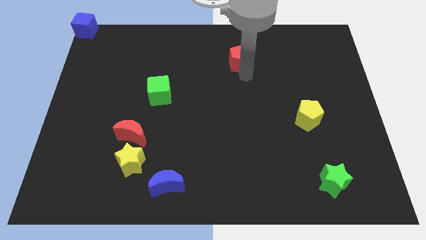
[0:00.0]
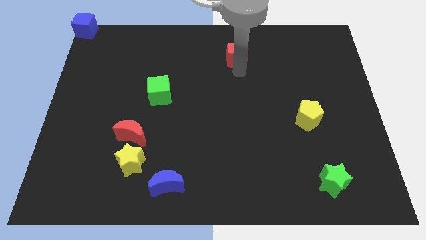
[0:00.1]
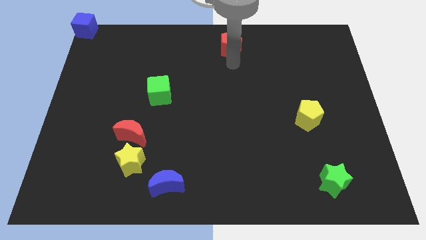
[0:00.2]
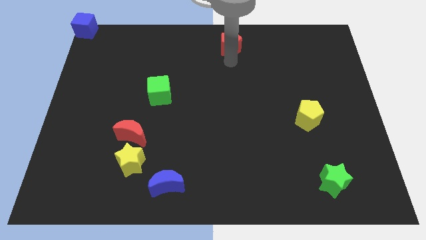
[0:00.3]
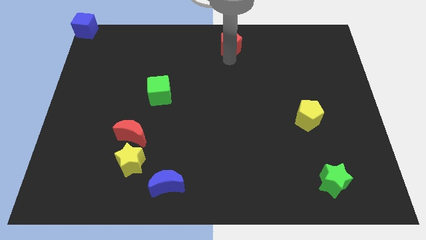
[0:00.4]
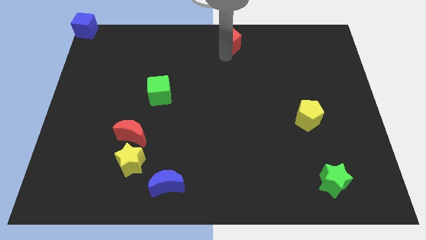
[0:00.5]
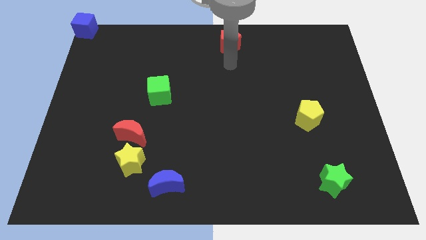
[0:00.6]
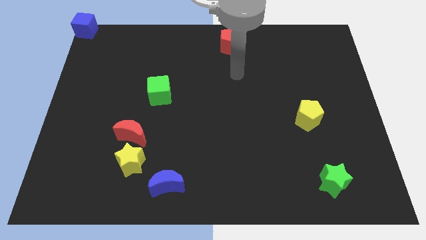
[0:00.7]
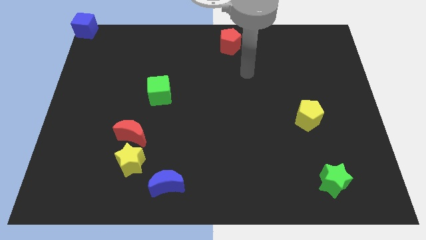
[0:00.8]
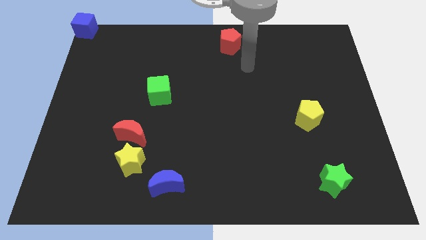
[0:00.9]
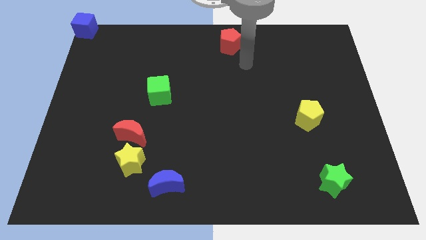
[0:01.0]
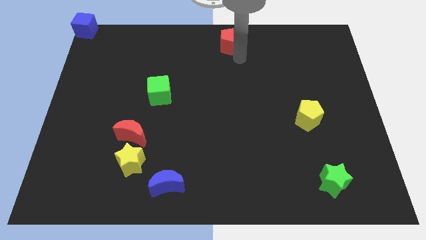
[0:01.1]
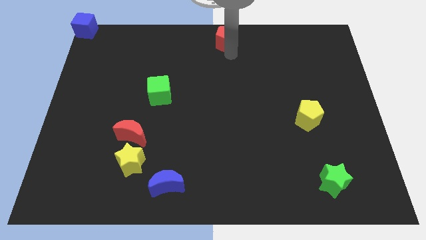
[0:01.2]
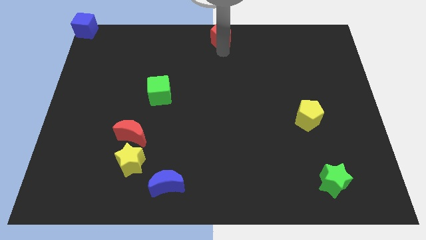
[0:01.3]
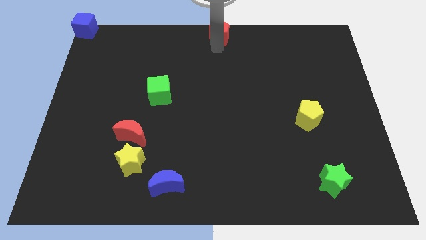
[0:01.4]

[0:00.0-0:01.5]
slide the red pentagon to the top center

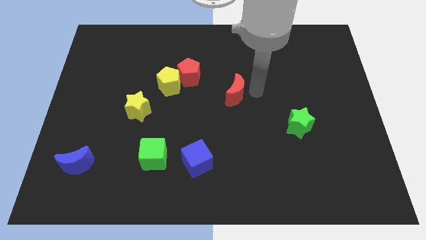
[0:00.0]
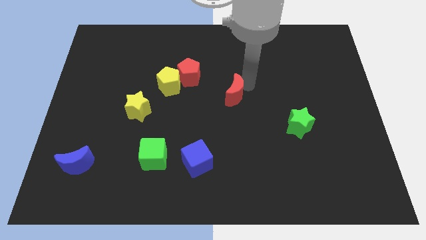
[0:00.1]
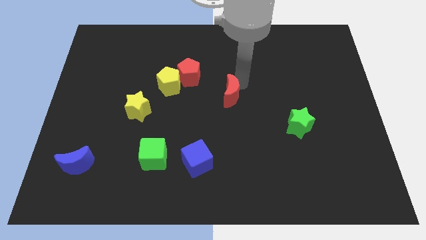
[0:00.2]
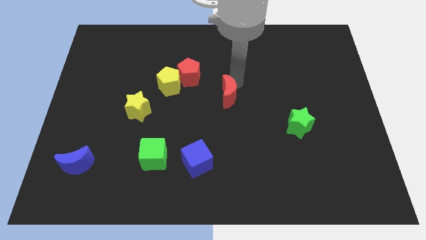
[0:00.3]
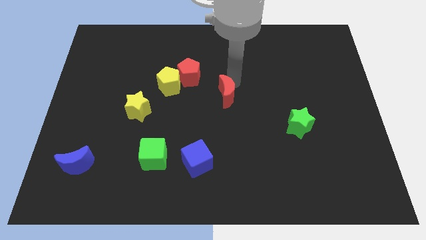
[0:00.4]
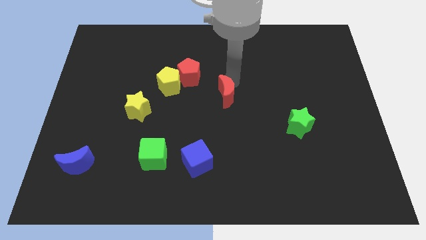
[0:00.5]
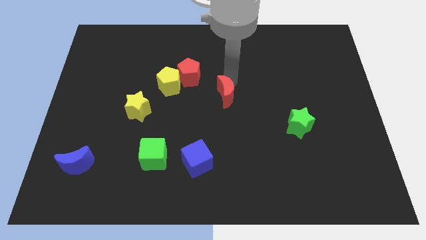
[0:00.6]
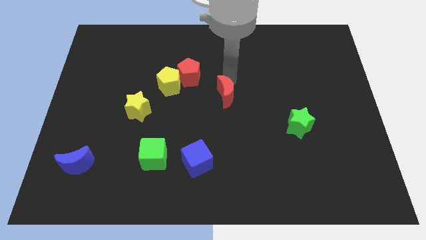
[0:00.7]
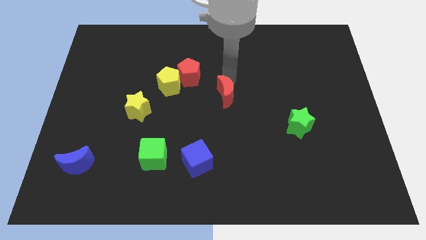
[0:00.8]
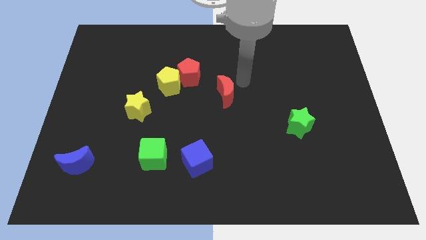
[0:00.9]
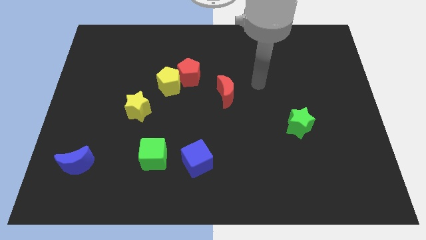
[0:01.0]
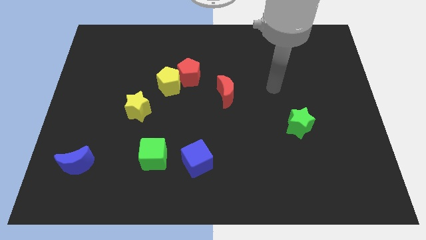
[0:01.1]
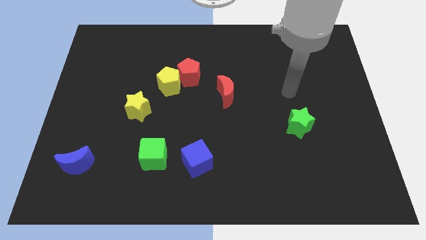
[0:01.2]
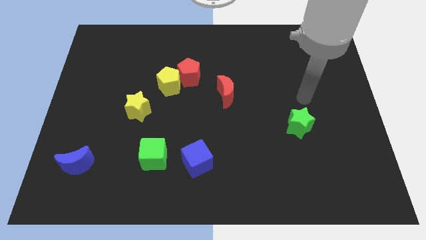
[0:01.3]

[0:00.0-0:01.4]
place your arm to the above the green star

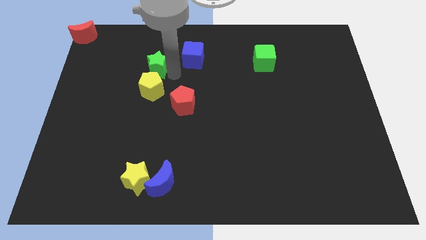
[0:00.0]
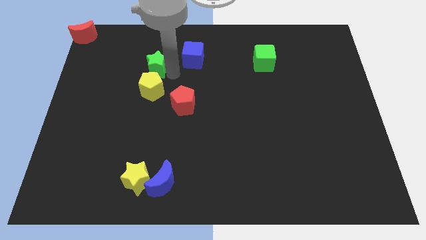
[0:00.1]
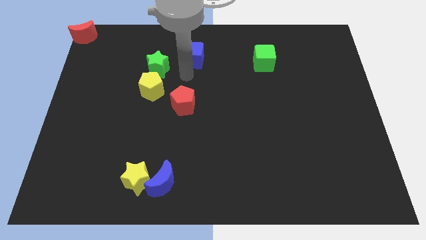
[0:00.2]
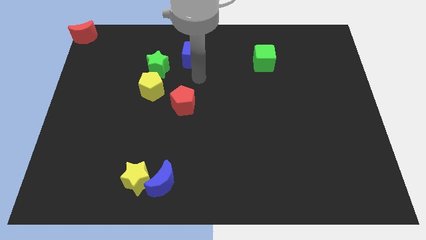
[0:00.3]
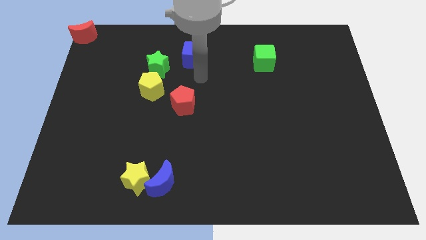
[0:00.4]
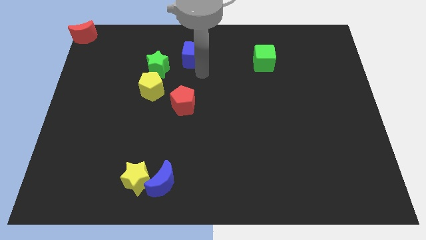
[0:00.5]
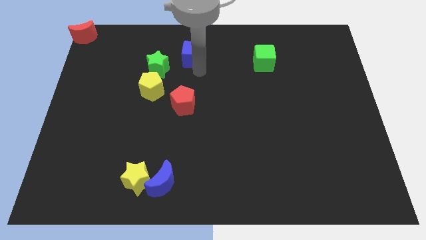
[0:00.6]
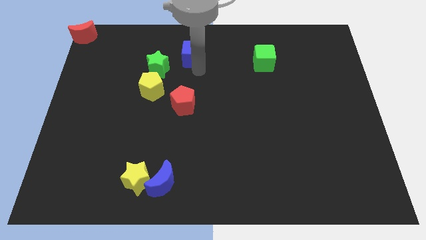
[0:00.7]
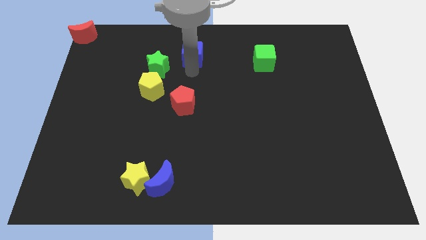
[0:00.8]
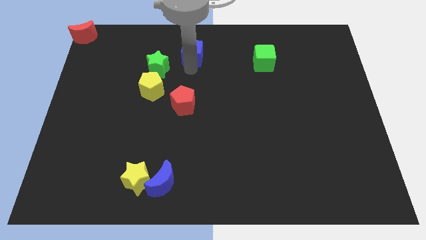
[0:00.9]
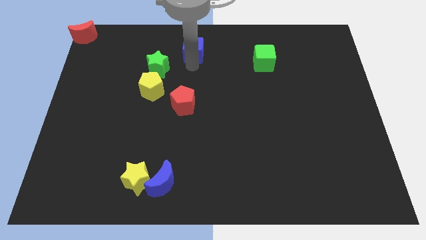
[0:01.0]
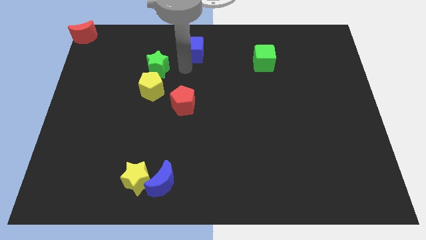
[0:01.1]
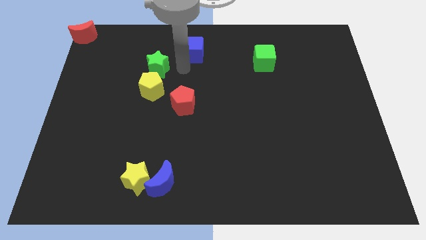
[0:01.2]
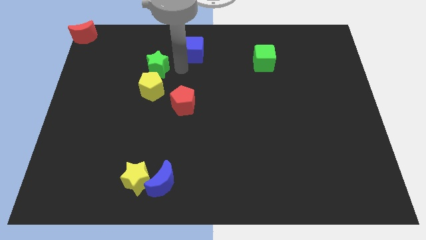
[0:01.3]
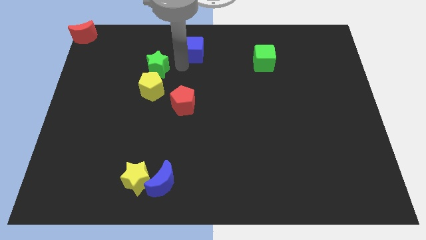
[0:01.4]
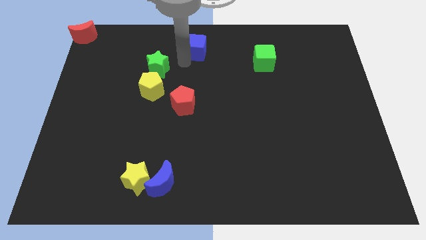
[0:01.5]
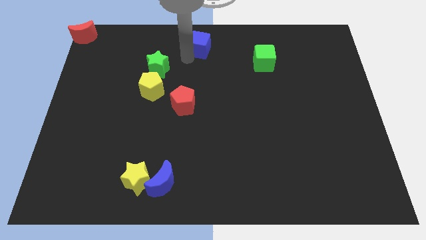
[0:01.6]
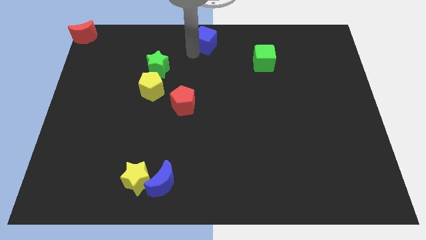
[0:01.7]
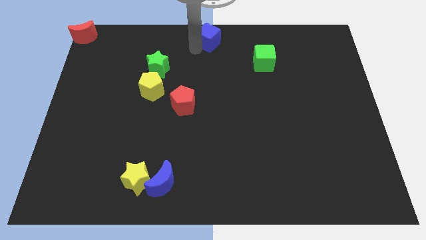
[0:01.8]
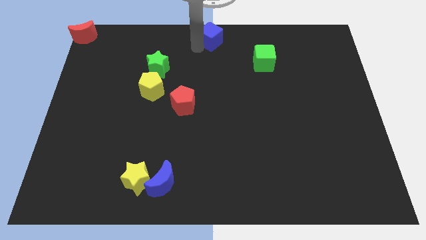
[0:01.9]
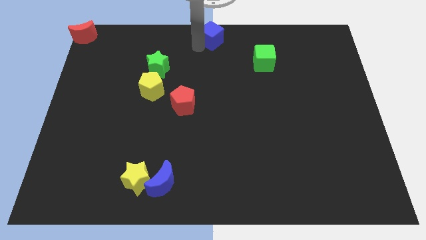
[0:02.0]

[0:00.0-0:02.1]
slide blue cube towards top center

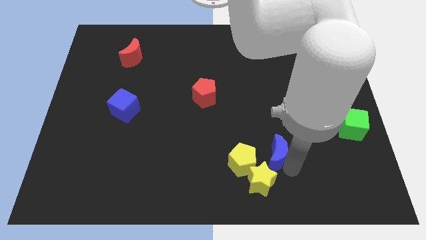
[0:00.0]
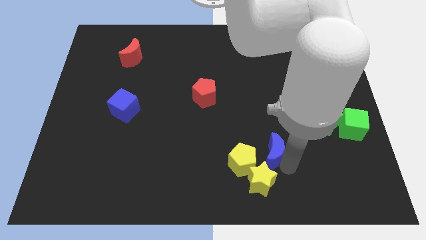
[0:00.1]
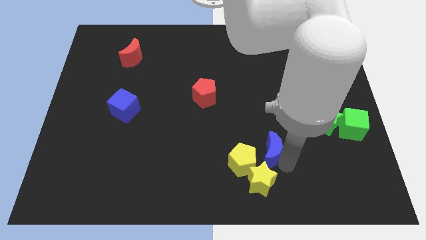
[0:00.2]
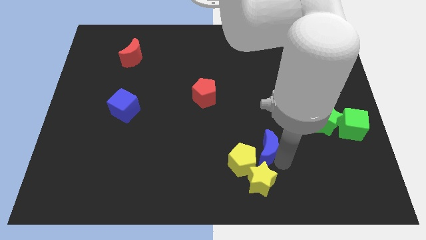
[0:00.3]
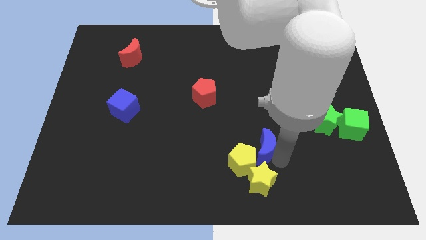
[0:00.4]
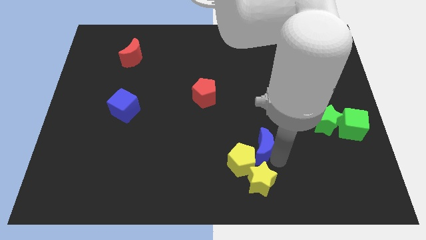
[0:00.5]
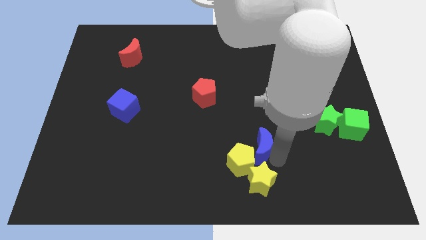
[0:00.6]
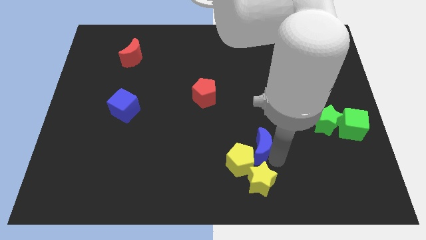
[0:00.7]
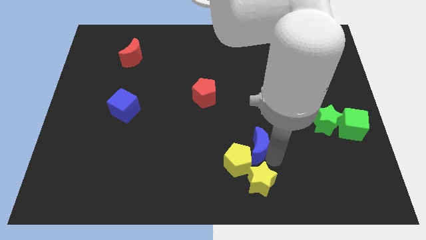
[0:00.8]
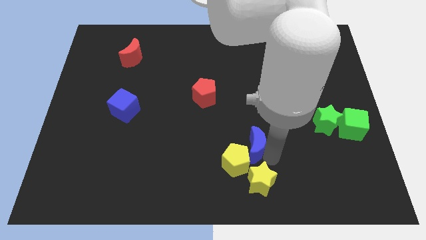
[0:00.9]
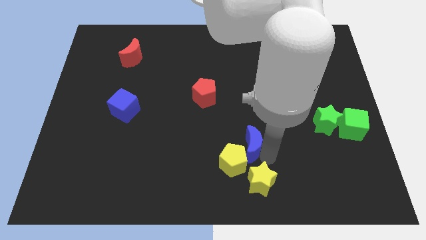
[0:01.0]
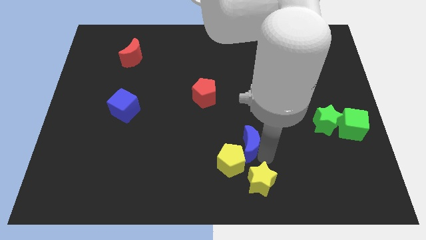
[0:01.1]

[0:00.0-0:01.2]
push the blue moon into the yellow pentgaon

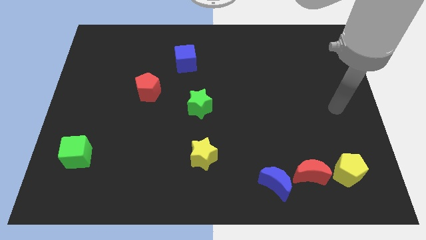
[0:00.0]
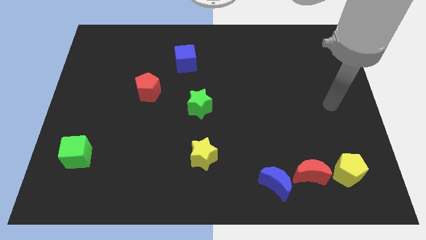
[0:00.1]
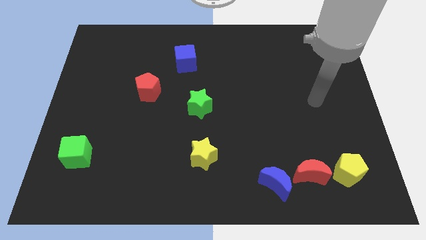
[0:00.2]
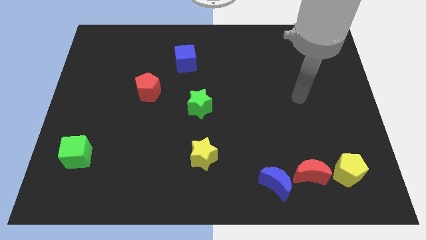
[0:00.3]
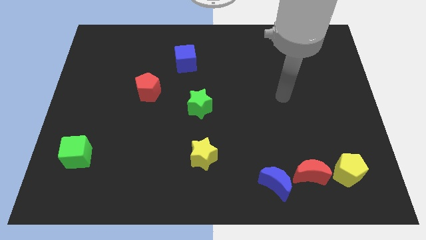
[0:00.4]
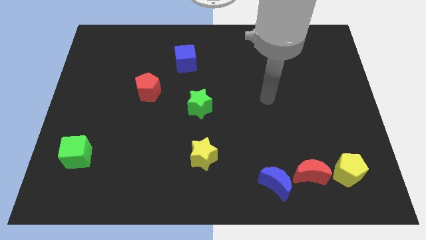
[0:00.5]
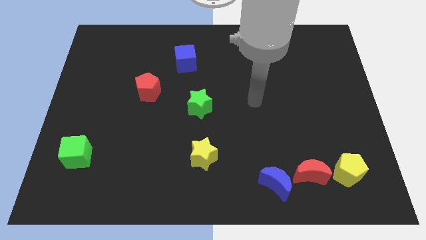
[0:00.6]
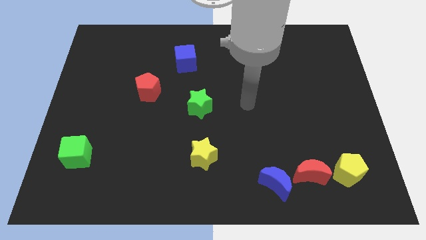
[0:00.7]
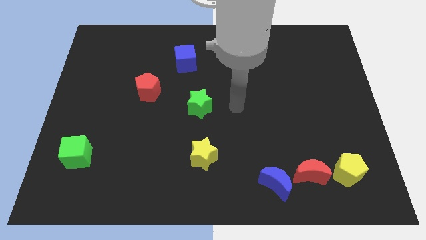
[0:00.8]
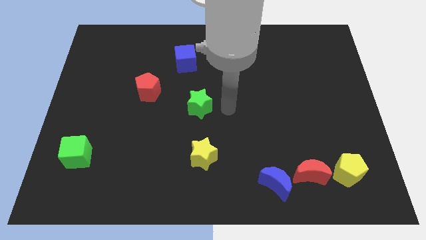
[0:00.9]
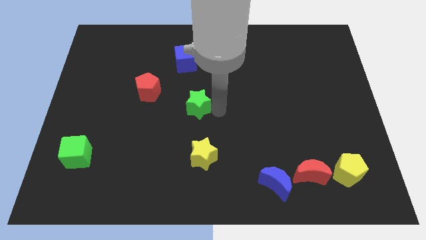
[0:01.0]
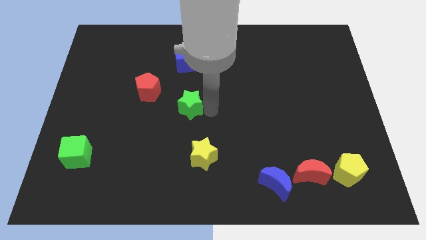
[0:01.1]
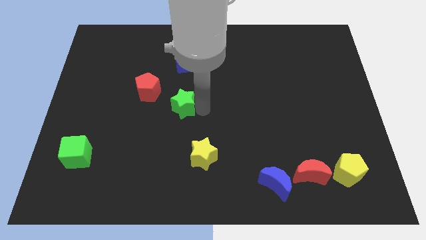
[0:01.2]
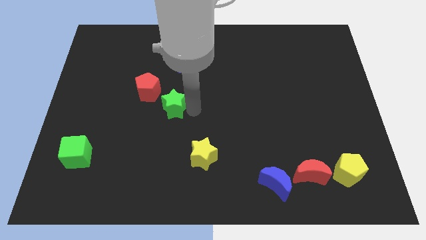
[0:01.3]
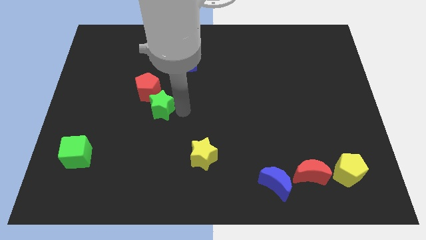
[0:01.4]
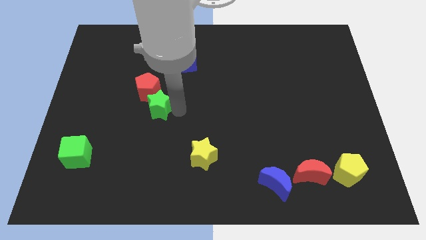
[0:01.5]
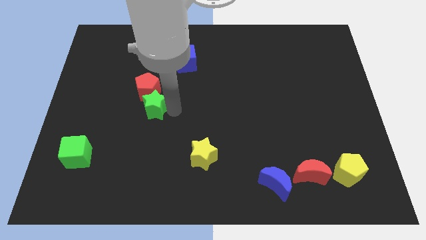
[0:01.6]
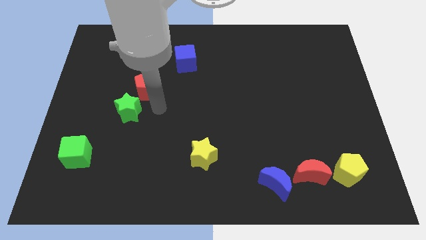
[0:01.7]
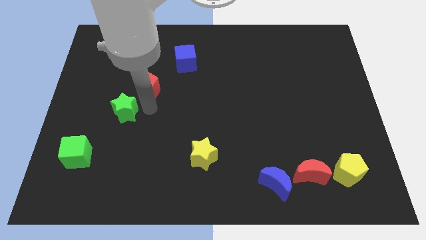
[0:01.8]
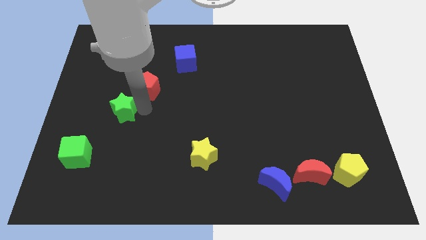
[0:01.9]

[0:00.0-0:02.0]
push the green star slightly to the left

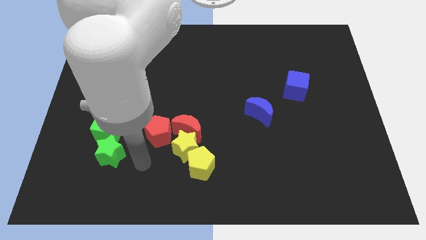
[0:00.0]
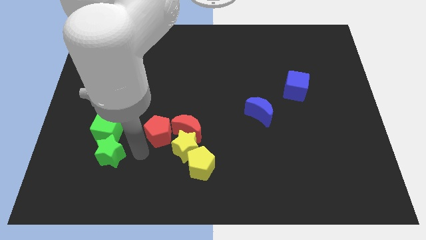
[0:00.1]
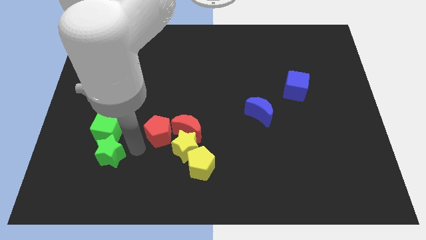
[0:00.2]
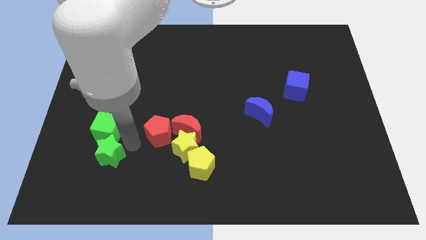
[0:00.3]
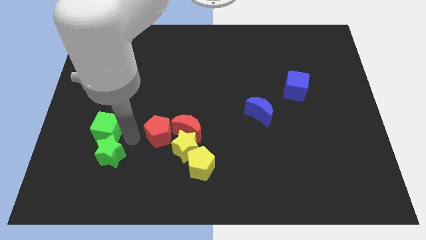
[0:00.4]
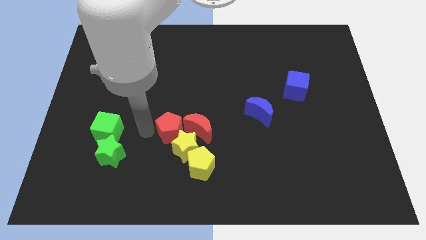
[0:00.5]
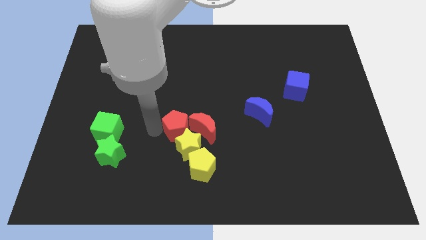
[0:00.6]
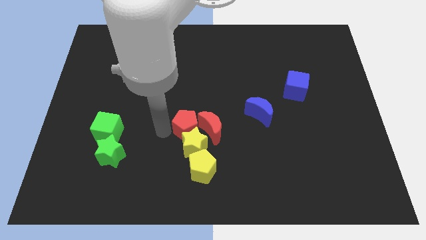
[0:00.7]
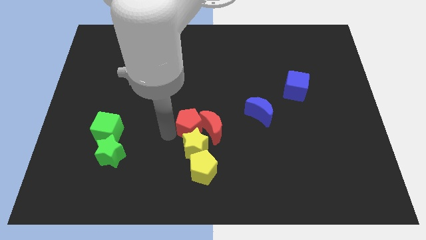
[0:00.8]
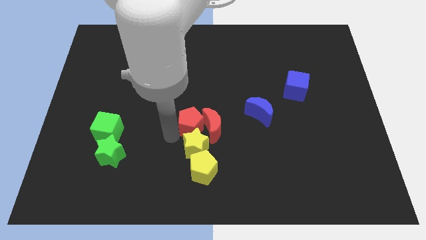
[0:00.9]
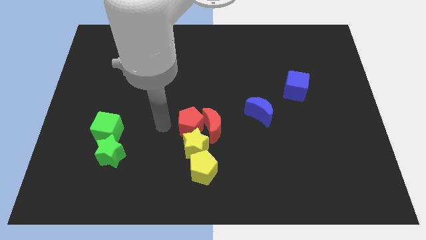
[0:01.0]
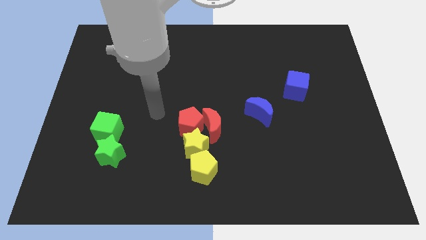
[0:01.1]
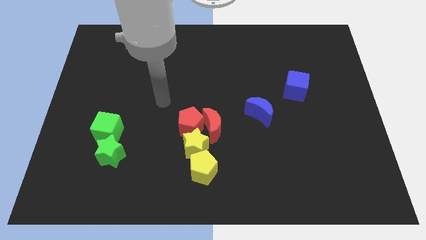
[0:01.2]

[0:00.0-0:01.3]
move the red pentagon into the red crescent
